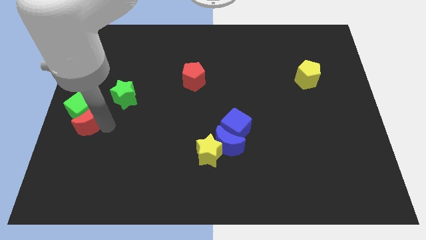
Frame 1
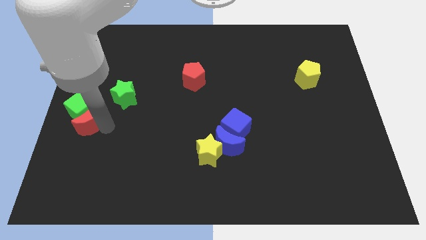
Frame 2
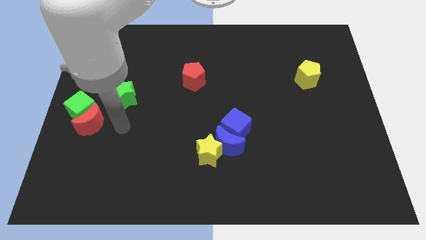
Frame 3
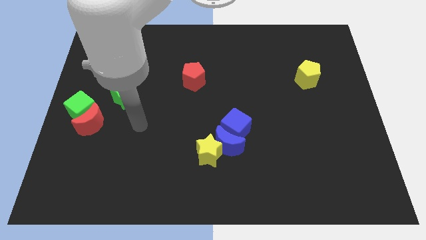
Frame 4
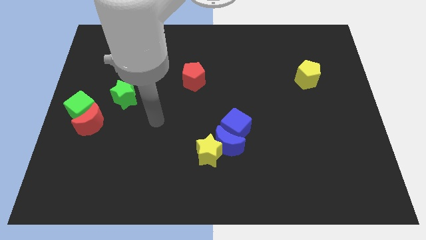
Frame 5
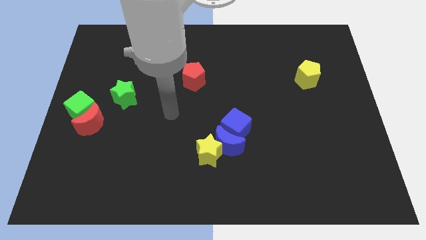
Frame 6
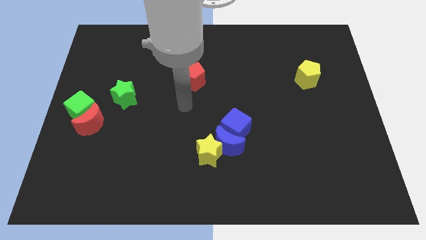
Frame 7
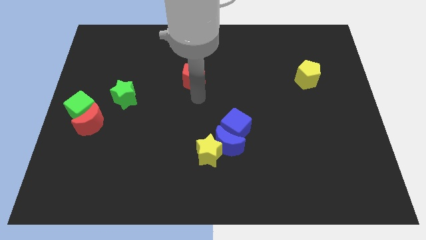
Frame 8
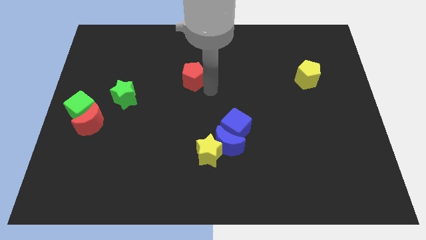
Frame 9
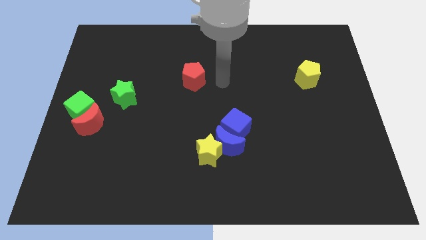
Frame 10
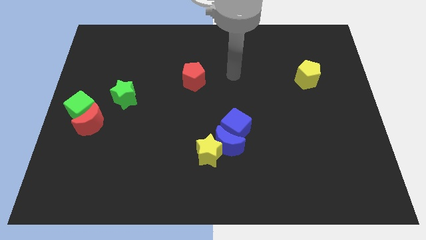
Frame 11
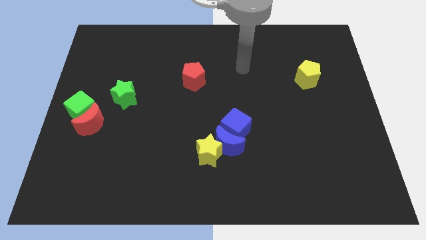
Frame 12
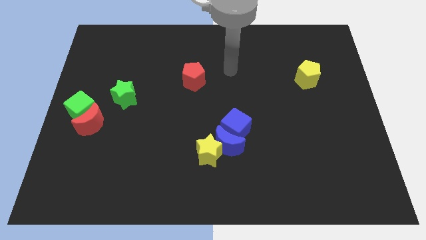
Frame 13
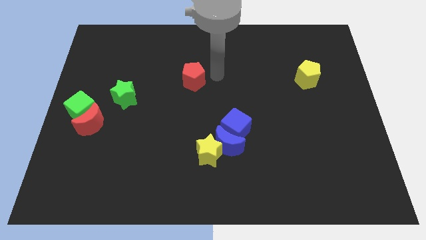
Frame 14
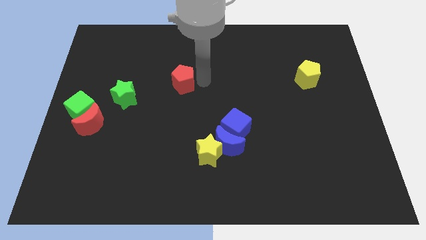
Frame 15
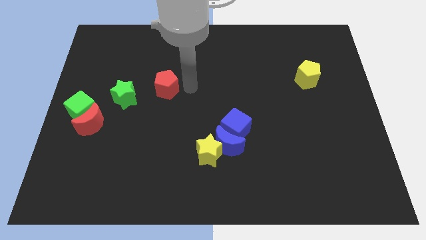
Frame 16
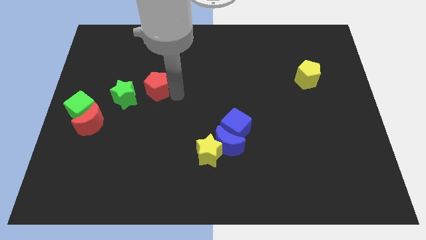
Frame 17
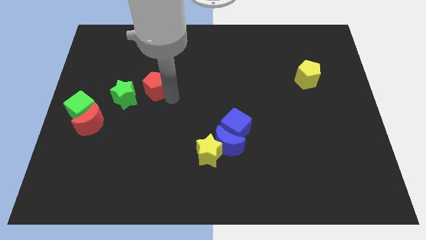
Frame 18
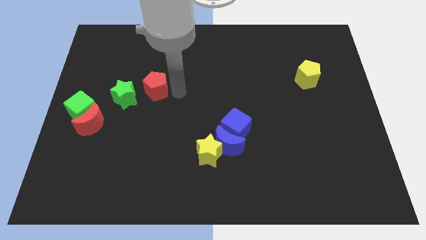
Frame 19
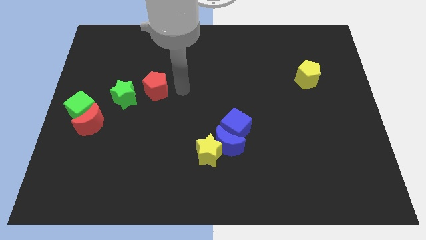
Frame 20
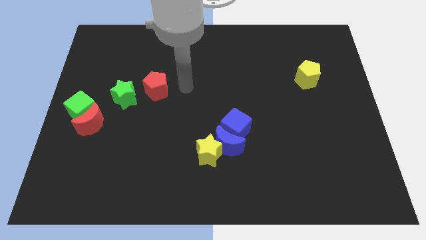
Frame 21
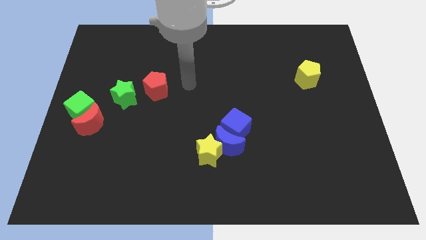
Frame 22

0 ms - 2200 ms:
place red pentagon to the top right of green star

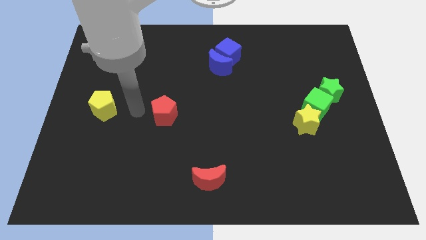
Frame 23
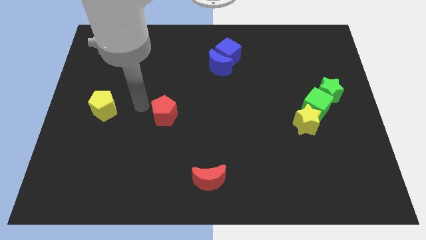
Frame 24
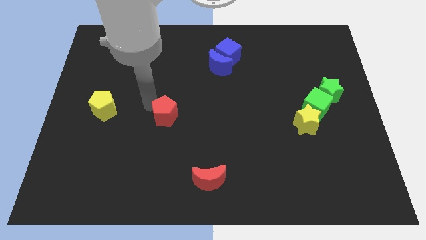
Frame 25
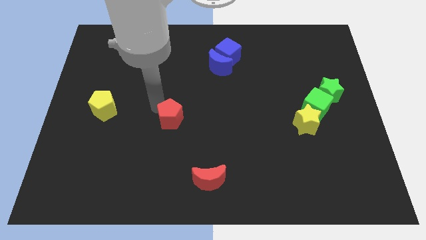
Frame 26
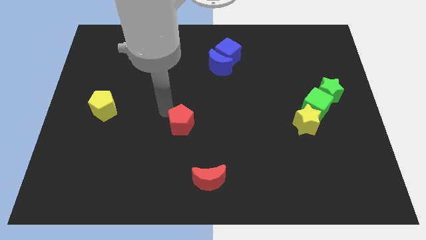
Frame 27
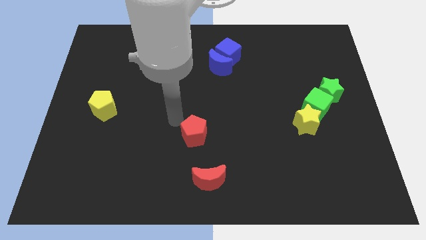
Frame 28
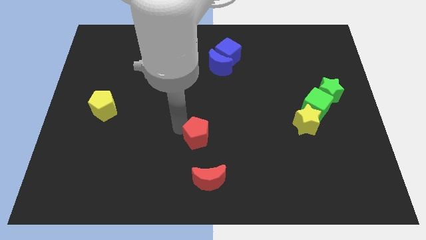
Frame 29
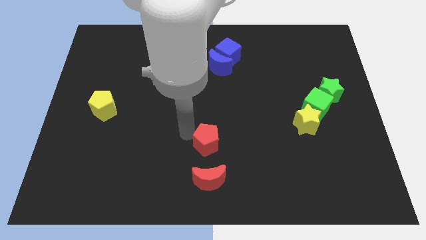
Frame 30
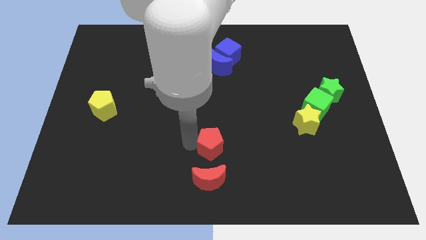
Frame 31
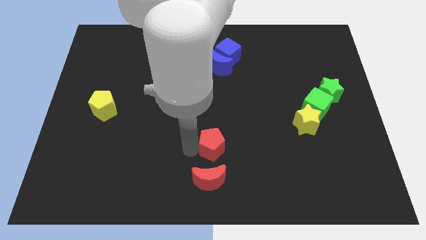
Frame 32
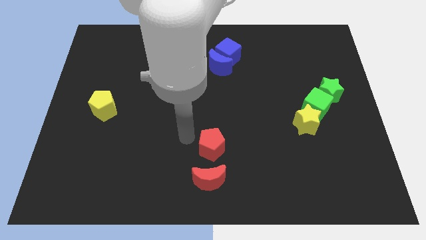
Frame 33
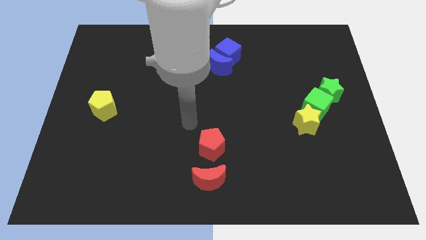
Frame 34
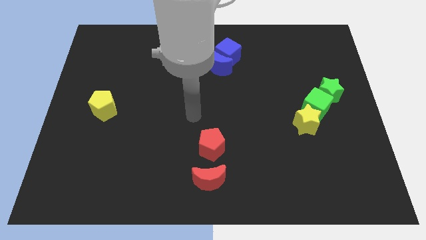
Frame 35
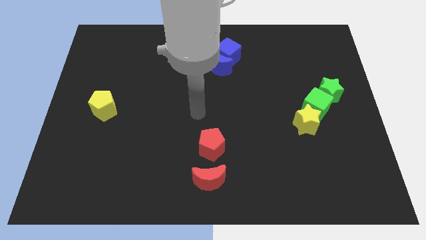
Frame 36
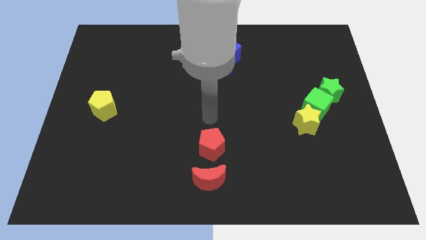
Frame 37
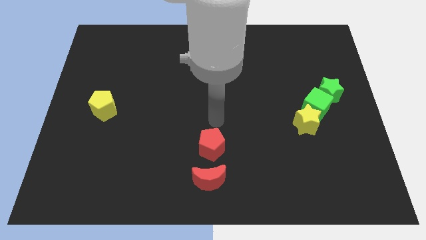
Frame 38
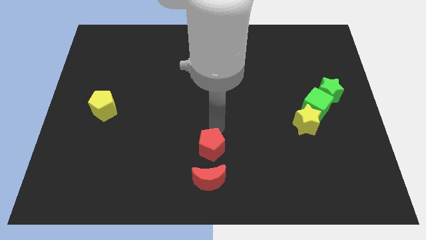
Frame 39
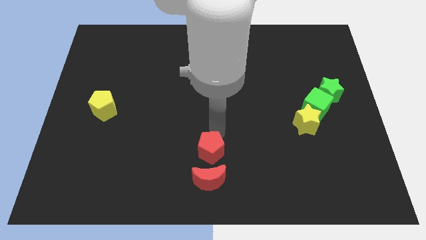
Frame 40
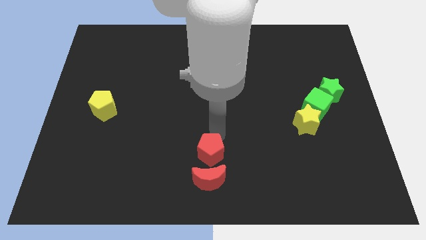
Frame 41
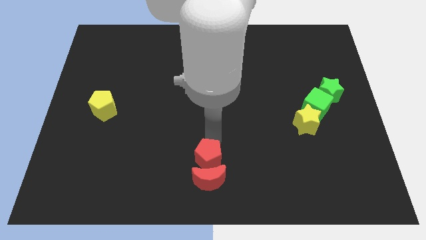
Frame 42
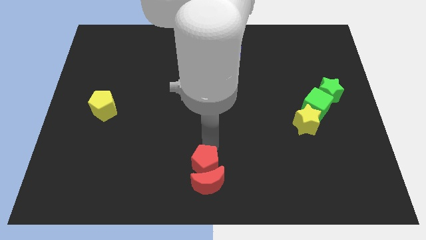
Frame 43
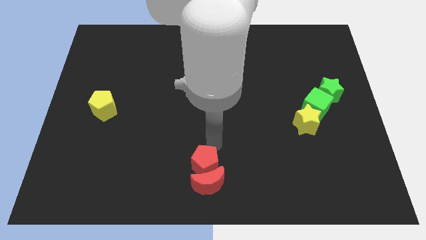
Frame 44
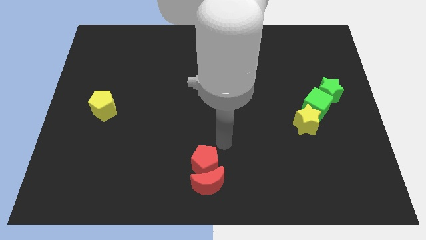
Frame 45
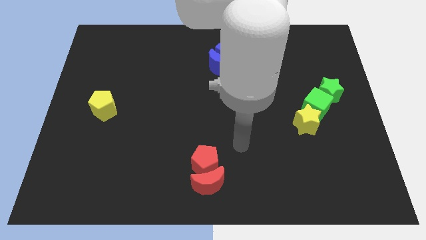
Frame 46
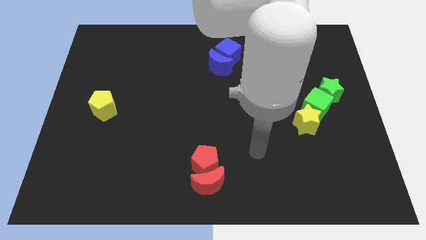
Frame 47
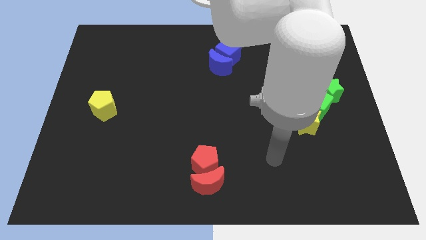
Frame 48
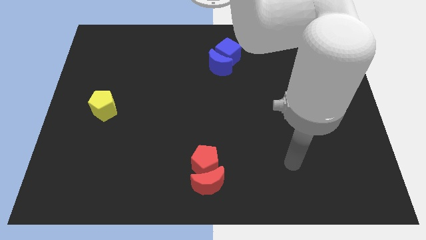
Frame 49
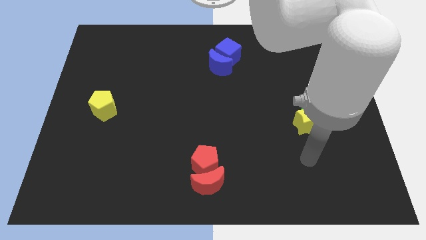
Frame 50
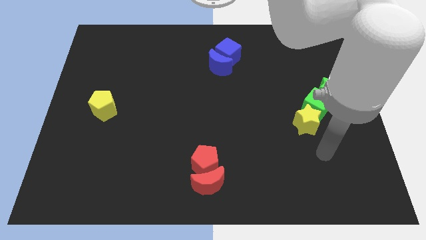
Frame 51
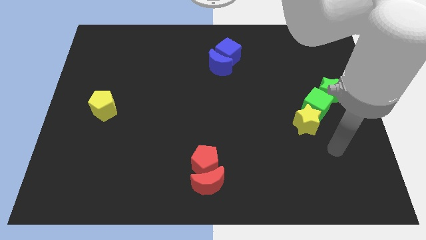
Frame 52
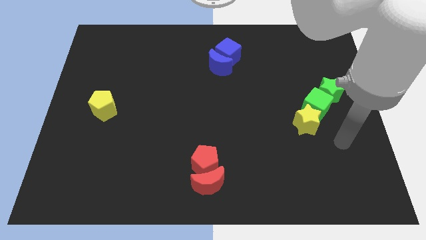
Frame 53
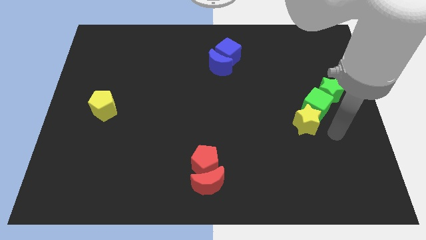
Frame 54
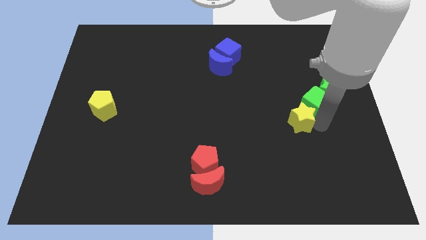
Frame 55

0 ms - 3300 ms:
move the red pentagon above the red moon

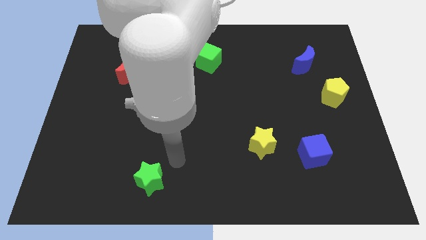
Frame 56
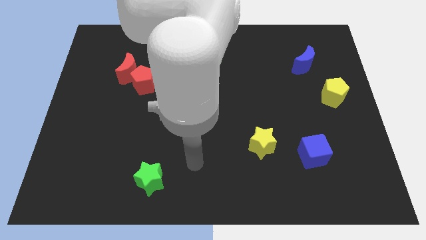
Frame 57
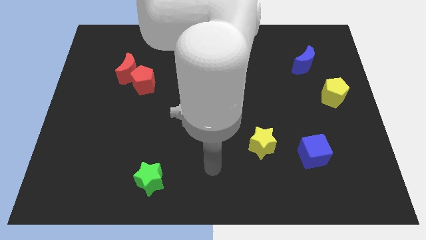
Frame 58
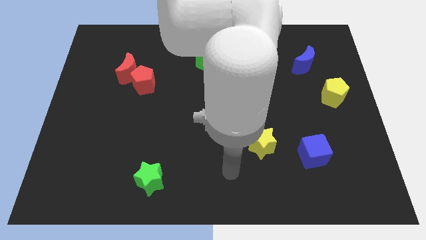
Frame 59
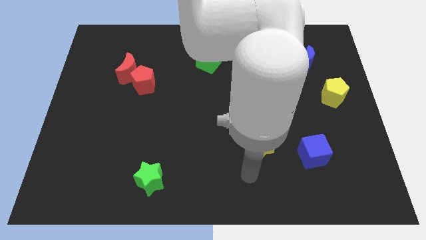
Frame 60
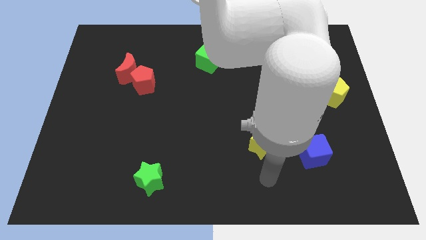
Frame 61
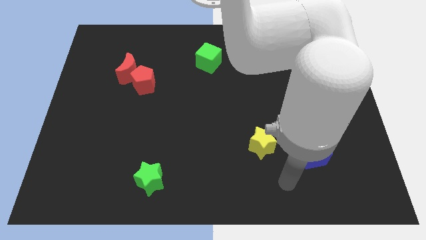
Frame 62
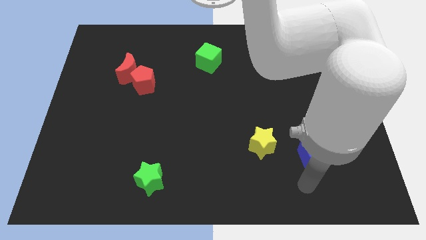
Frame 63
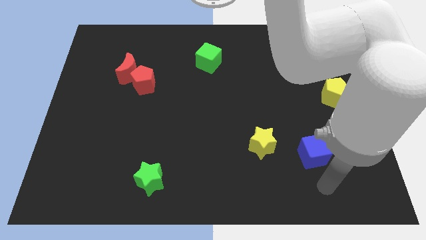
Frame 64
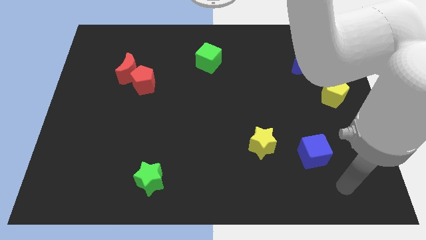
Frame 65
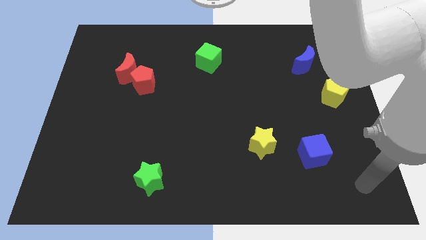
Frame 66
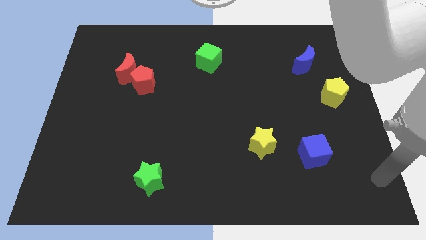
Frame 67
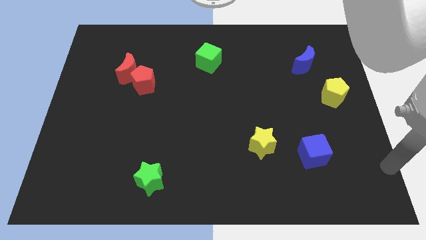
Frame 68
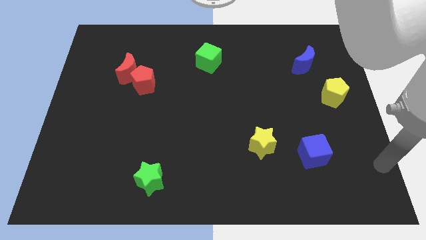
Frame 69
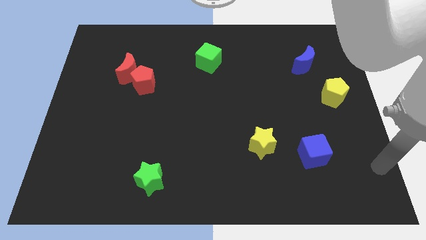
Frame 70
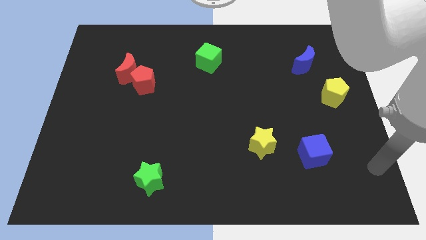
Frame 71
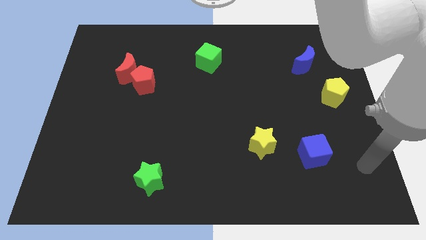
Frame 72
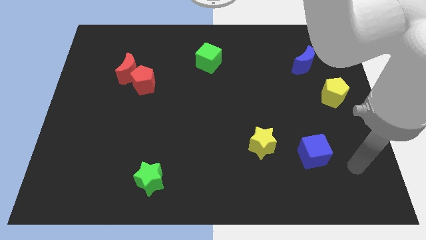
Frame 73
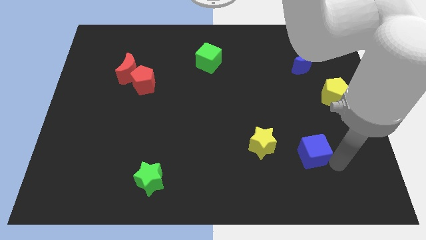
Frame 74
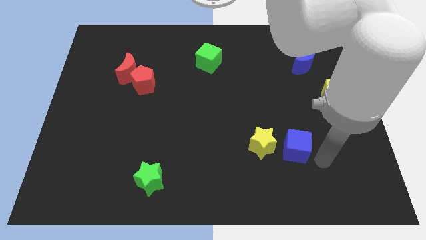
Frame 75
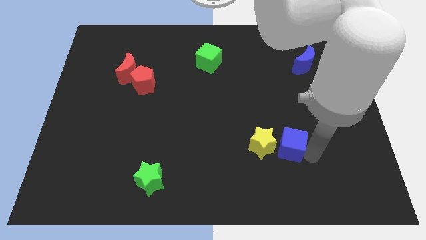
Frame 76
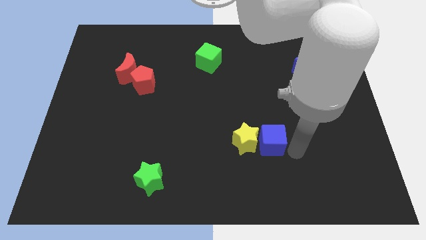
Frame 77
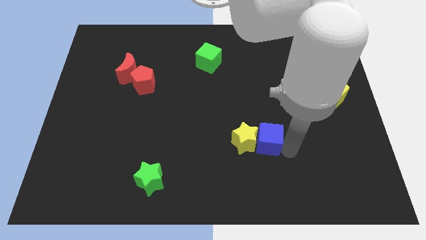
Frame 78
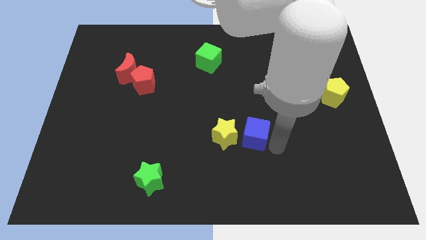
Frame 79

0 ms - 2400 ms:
move the blue cube into the yellow star

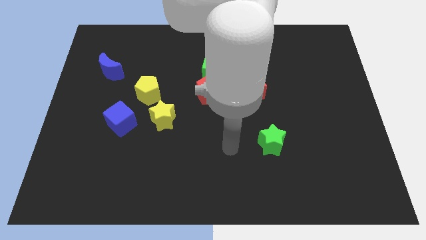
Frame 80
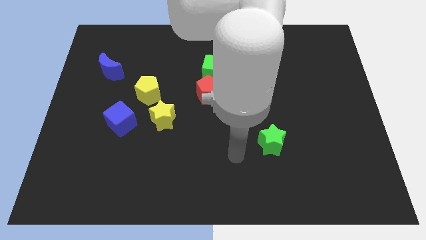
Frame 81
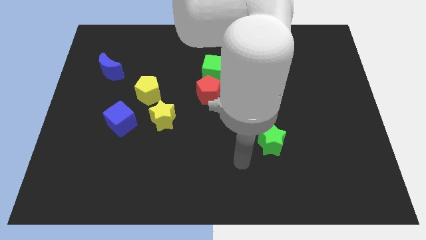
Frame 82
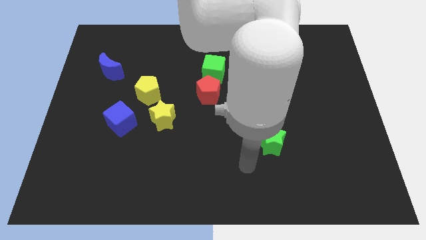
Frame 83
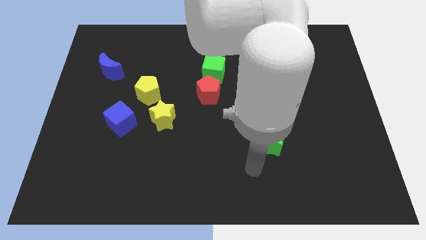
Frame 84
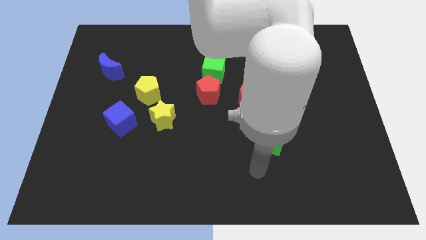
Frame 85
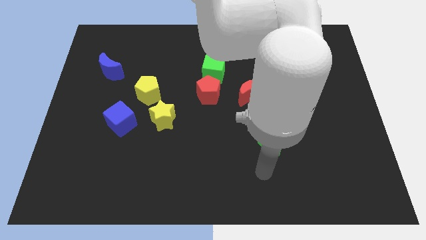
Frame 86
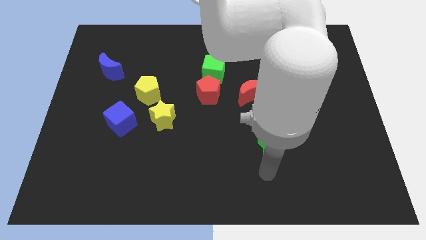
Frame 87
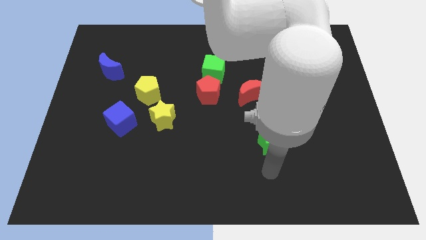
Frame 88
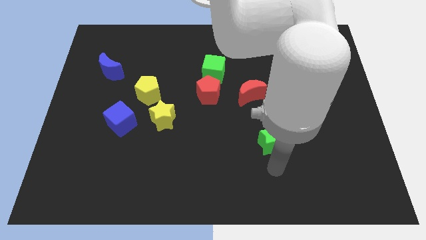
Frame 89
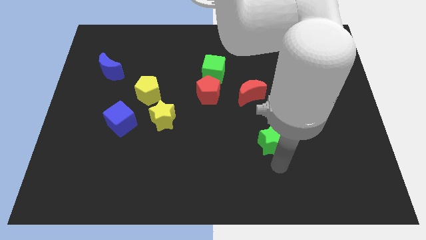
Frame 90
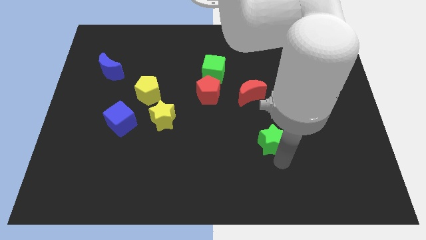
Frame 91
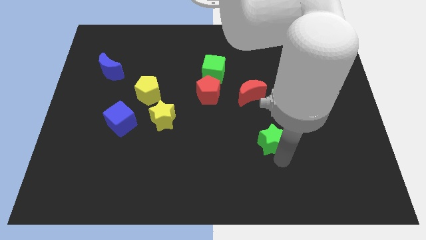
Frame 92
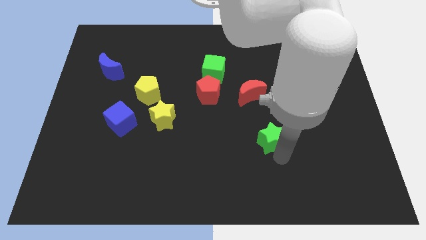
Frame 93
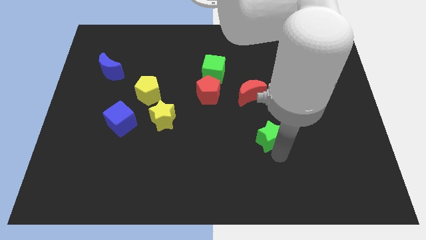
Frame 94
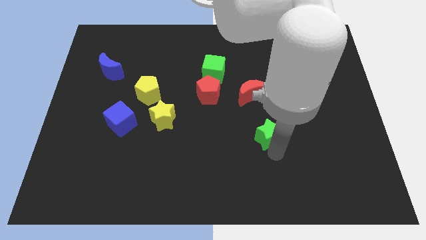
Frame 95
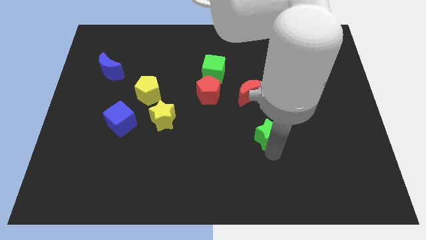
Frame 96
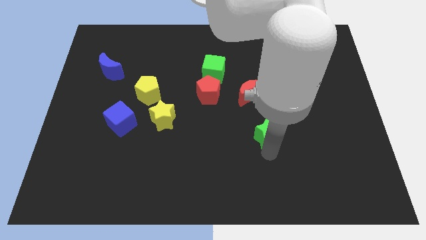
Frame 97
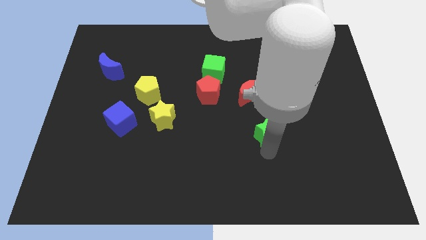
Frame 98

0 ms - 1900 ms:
move the arm close to the green star on the bottom right of the board
